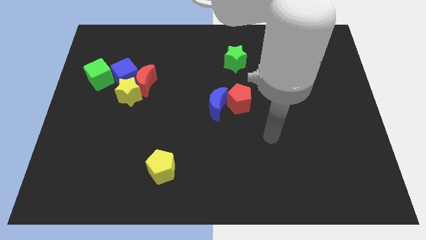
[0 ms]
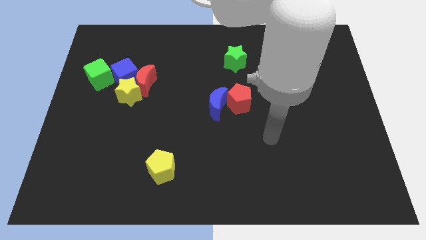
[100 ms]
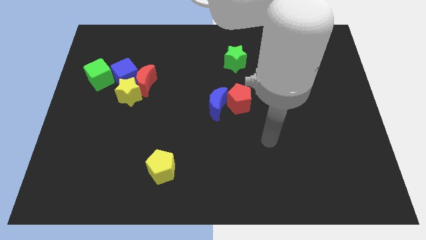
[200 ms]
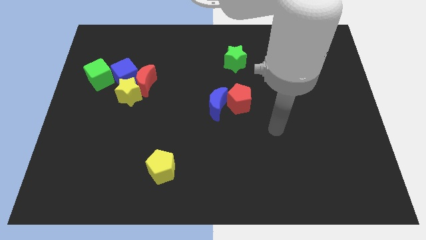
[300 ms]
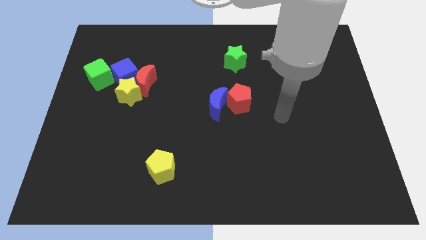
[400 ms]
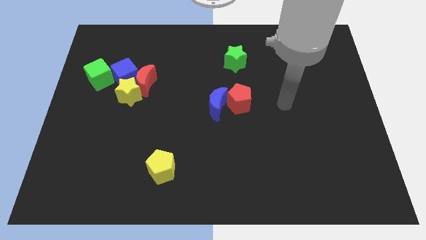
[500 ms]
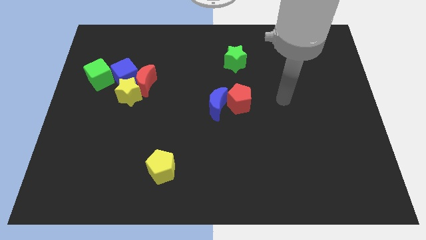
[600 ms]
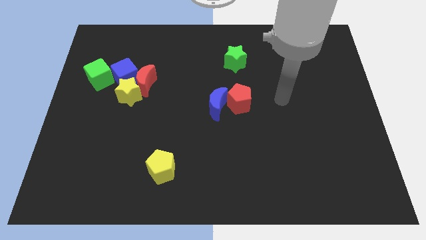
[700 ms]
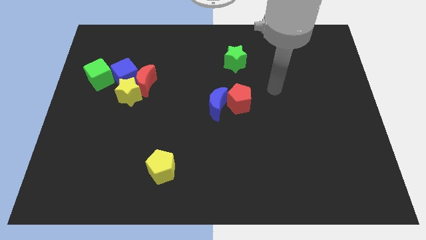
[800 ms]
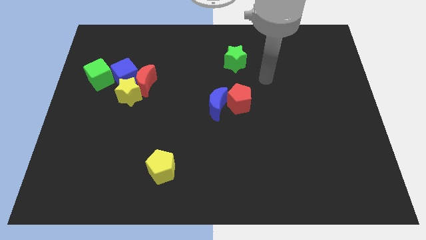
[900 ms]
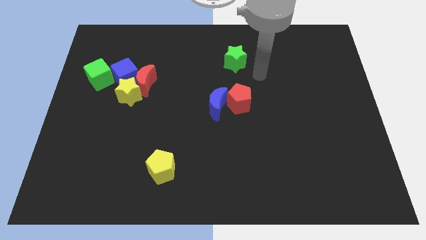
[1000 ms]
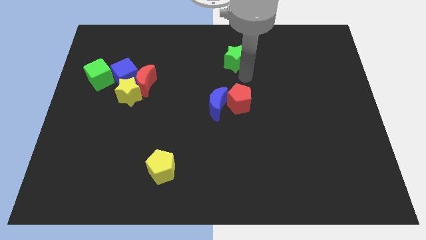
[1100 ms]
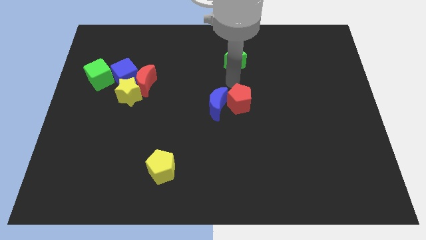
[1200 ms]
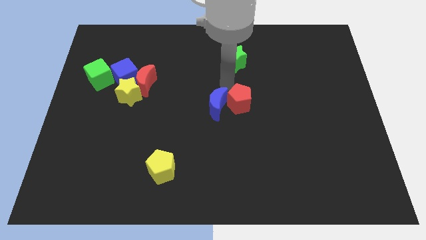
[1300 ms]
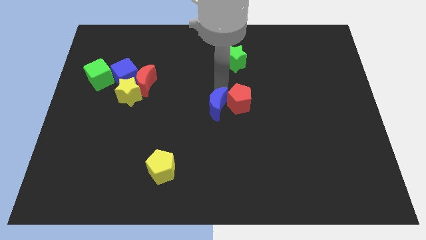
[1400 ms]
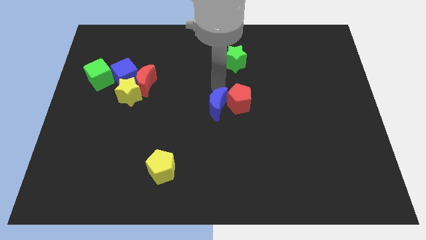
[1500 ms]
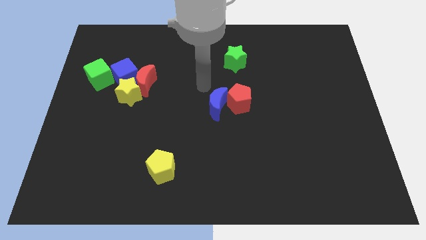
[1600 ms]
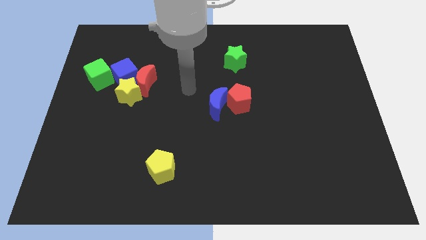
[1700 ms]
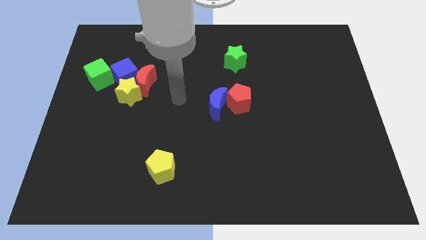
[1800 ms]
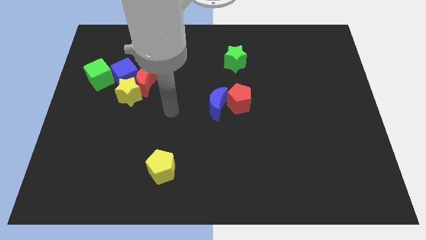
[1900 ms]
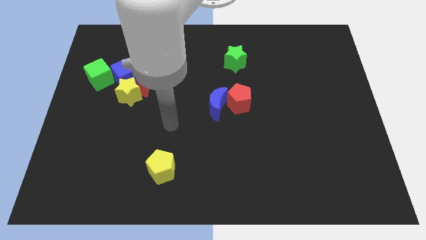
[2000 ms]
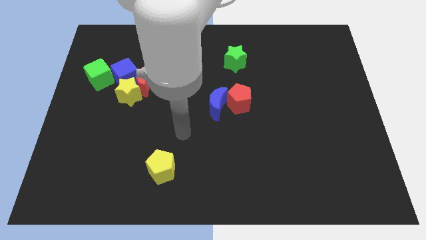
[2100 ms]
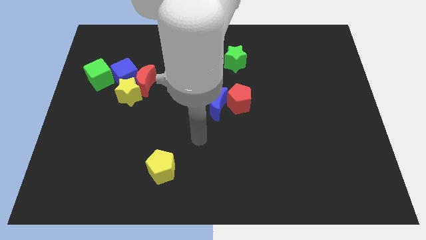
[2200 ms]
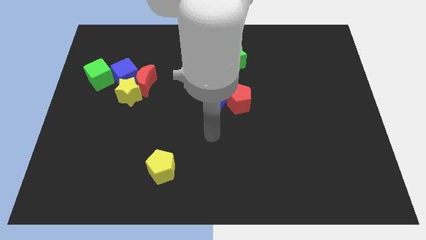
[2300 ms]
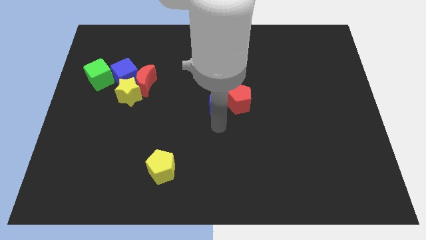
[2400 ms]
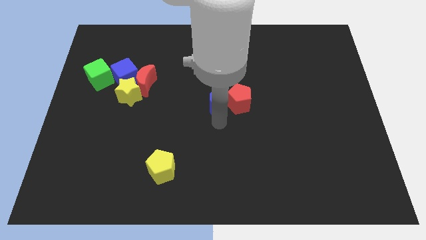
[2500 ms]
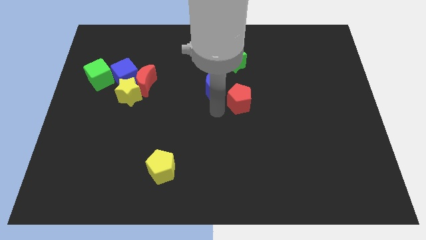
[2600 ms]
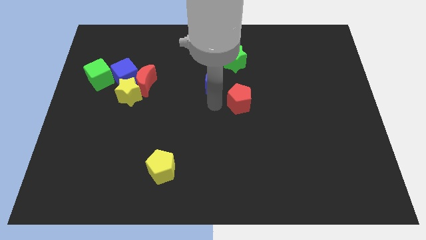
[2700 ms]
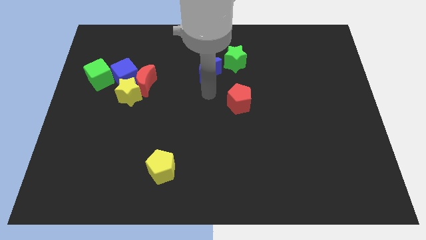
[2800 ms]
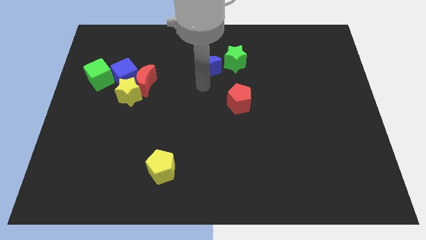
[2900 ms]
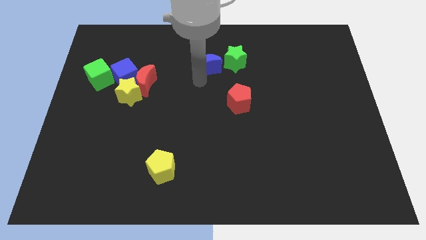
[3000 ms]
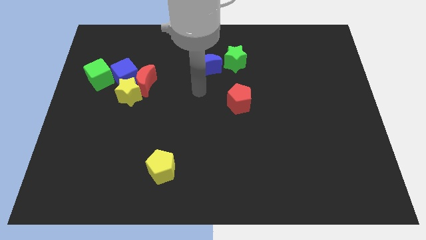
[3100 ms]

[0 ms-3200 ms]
separate the blue moon from the red pentagon

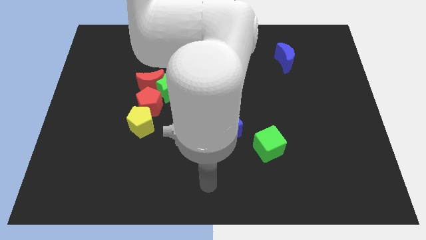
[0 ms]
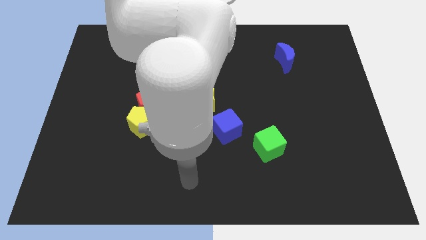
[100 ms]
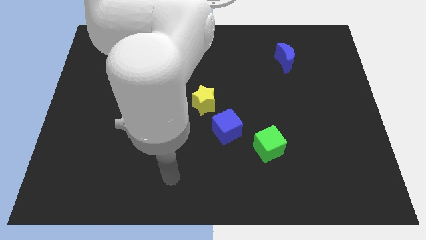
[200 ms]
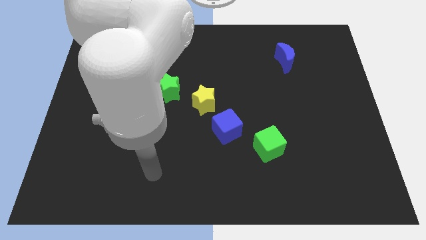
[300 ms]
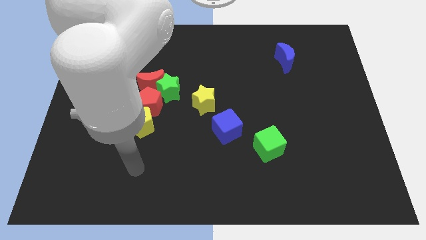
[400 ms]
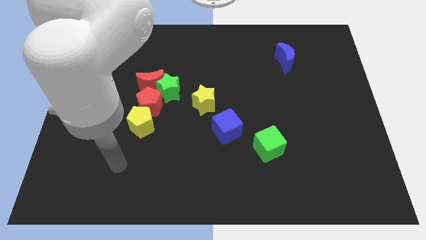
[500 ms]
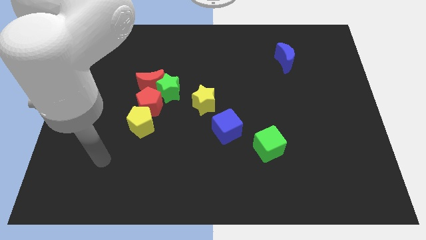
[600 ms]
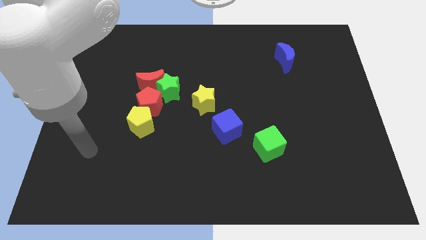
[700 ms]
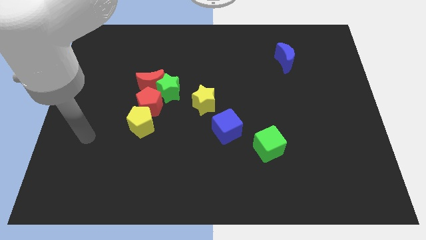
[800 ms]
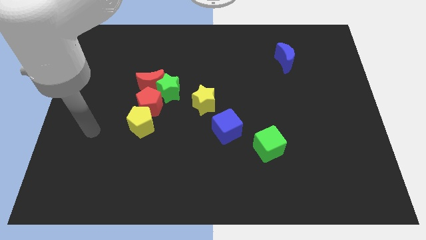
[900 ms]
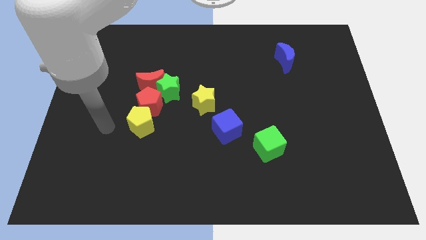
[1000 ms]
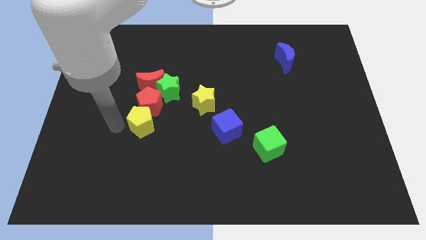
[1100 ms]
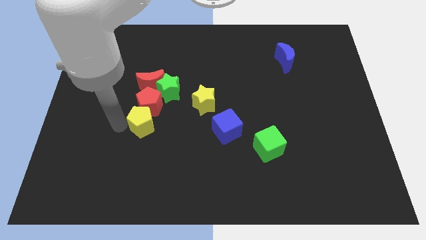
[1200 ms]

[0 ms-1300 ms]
point your arm to the left side of yellow pentagon

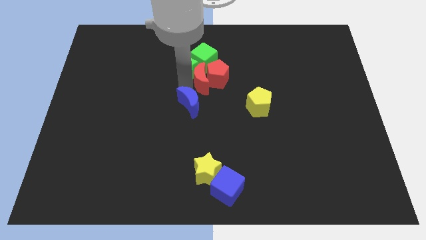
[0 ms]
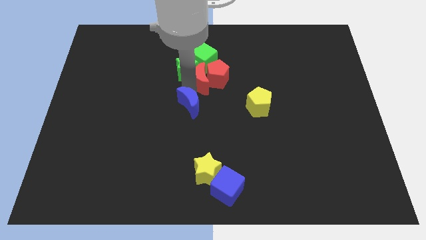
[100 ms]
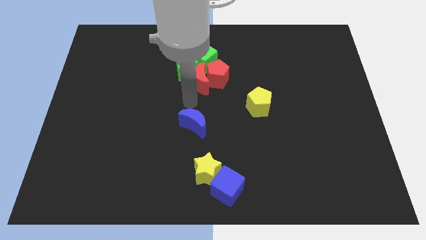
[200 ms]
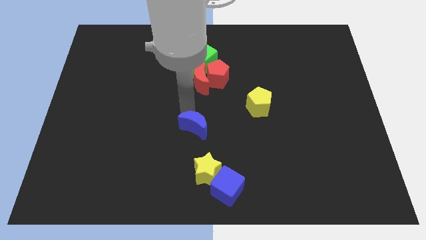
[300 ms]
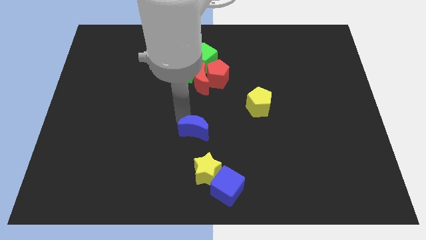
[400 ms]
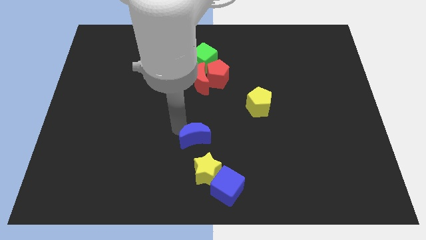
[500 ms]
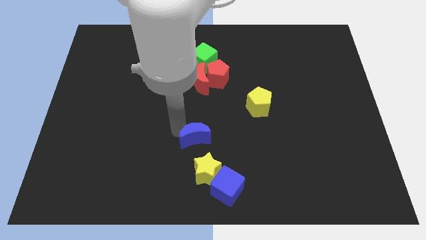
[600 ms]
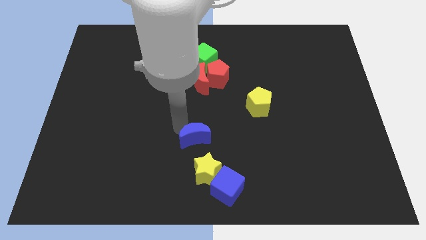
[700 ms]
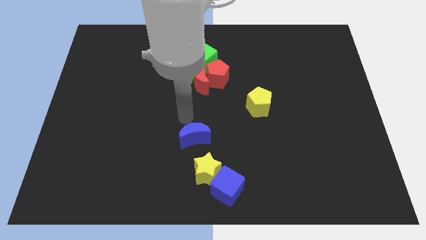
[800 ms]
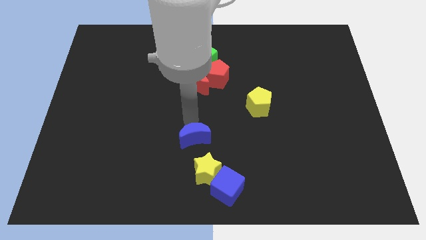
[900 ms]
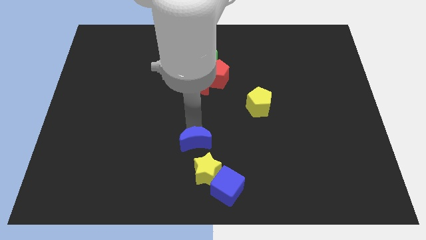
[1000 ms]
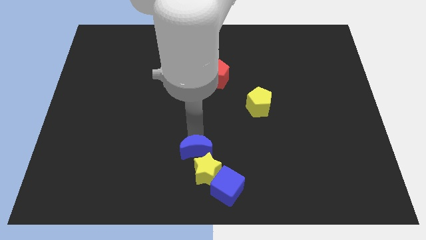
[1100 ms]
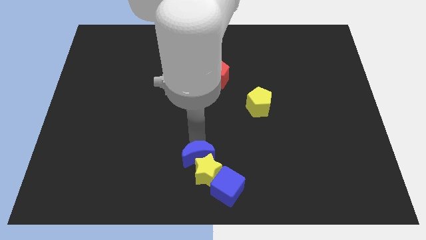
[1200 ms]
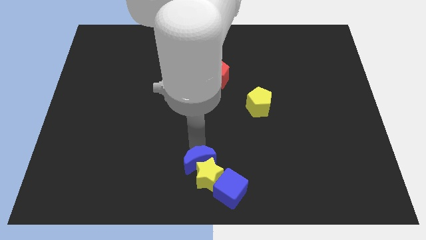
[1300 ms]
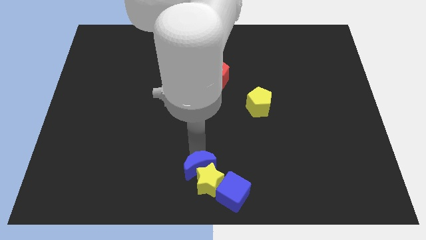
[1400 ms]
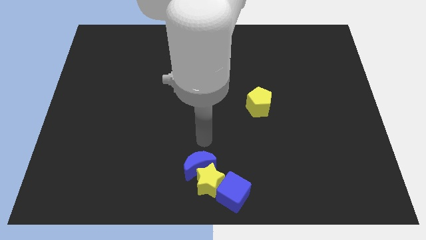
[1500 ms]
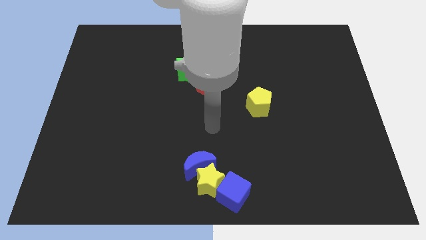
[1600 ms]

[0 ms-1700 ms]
push the blue crescent into the yellow star

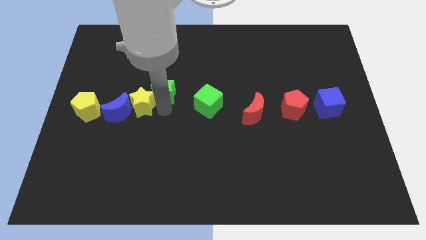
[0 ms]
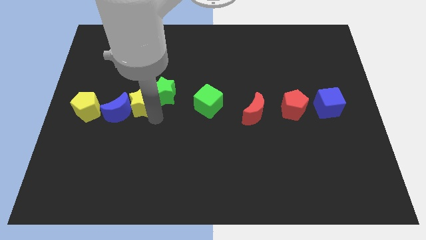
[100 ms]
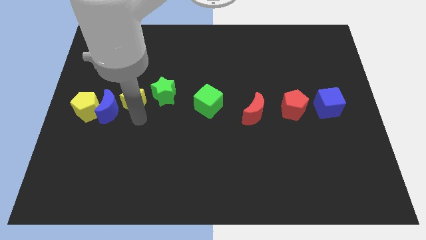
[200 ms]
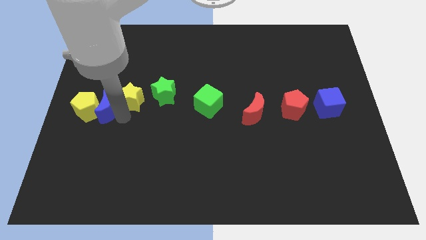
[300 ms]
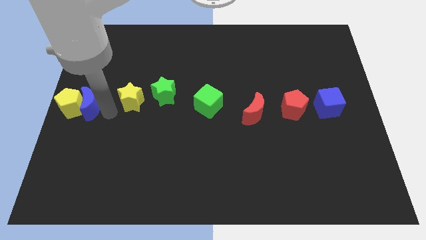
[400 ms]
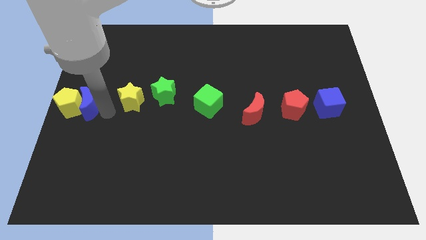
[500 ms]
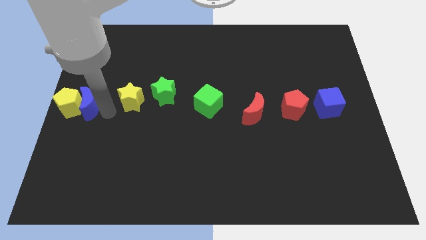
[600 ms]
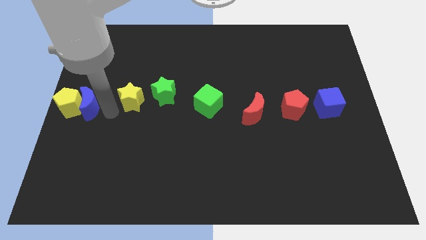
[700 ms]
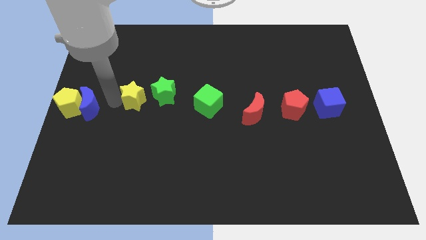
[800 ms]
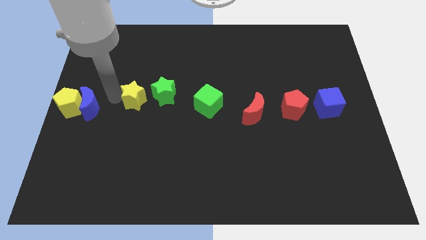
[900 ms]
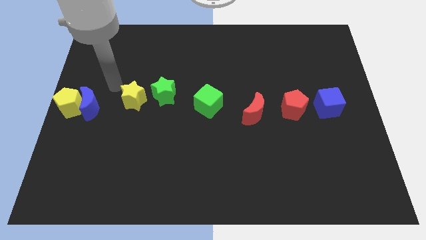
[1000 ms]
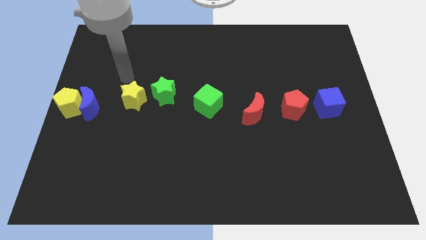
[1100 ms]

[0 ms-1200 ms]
separate blue moon and the yellow pentagon from the yellow star

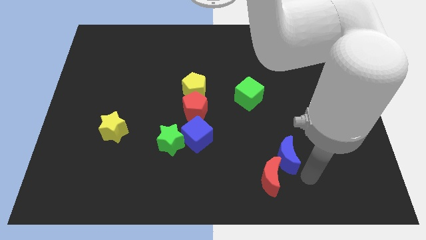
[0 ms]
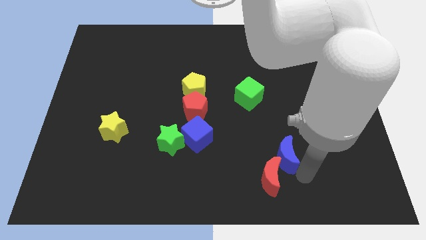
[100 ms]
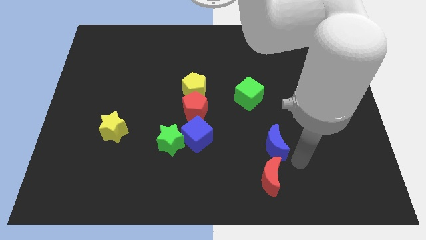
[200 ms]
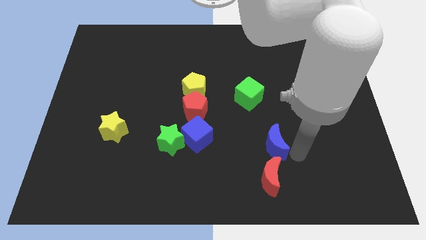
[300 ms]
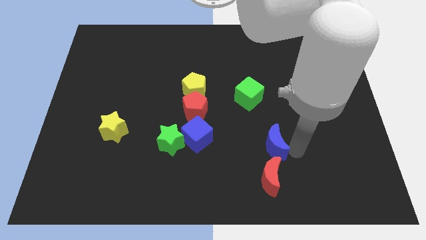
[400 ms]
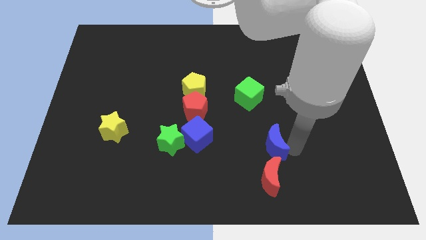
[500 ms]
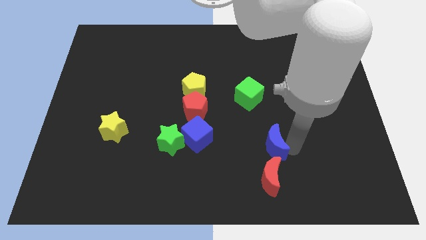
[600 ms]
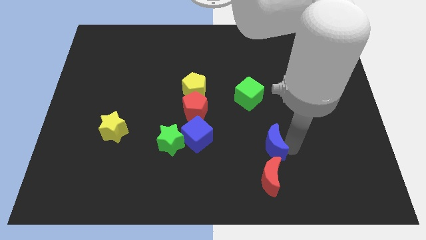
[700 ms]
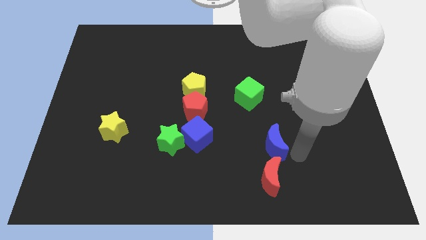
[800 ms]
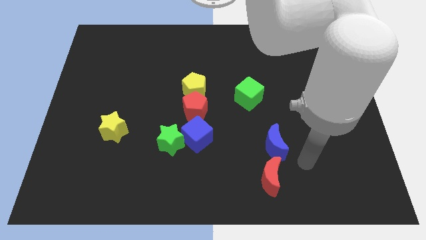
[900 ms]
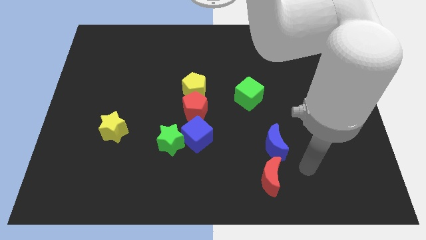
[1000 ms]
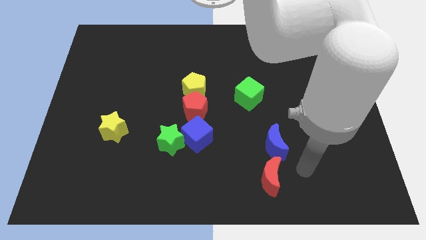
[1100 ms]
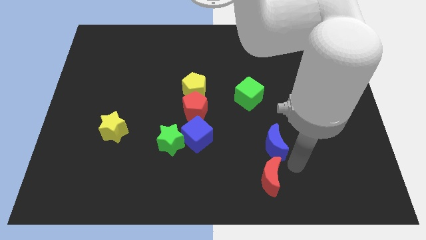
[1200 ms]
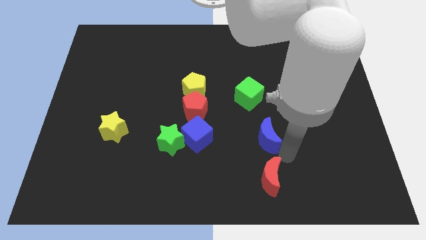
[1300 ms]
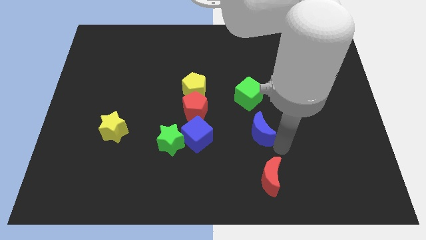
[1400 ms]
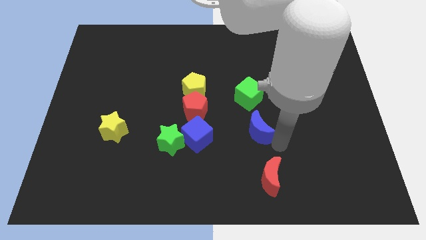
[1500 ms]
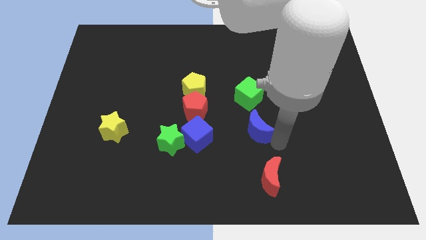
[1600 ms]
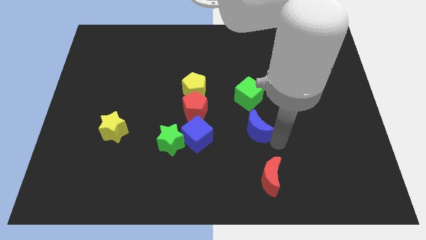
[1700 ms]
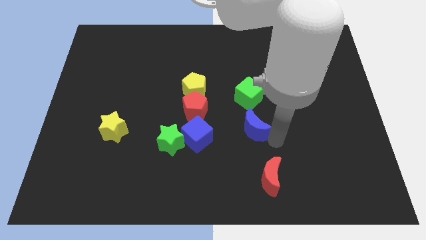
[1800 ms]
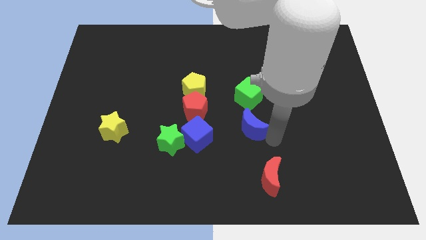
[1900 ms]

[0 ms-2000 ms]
move the blue crescent diagonal to the right of the blue cube
